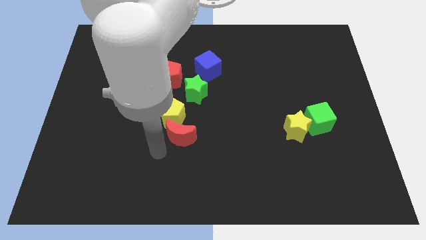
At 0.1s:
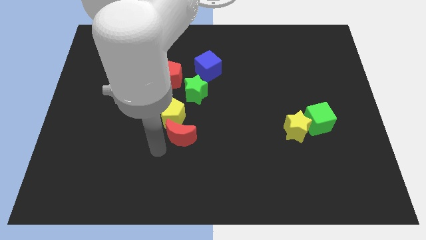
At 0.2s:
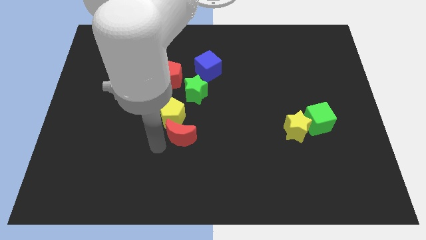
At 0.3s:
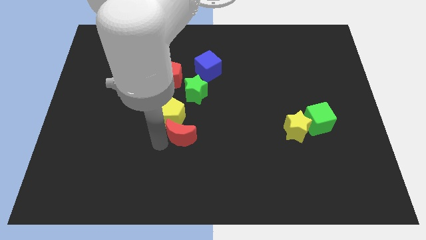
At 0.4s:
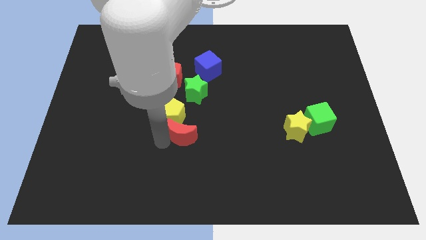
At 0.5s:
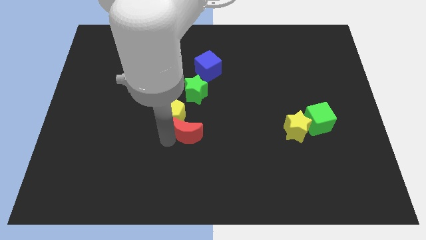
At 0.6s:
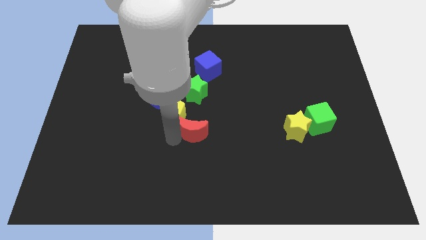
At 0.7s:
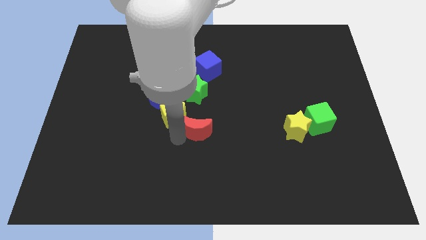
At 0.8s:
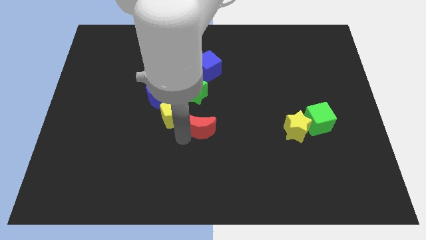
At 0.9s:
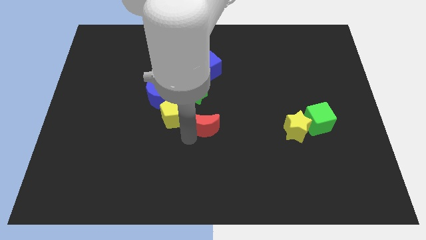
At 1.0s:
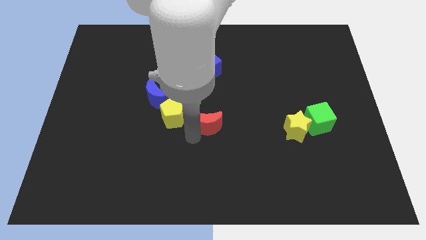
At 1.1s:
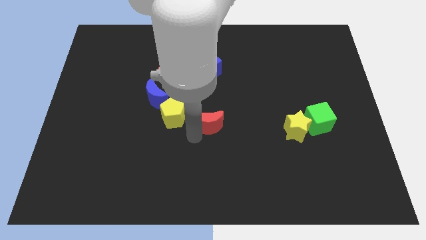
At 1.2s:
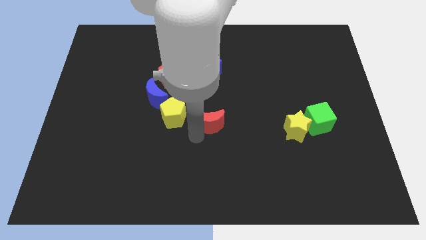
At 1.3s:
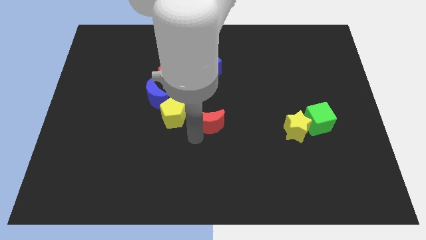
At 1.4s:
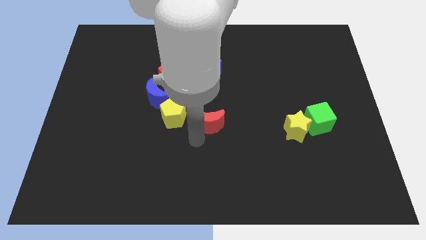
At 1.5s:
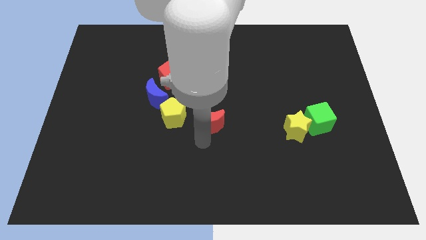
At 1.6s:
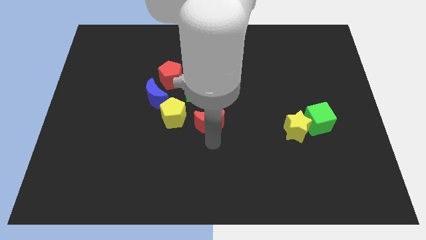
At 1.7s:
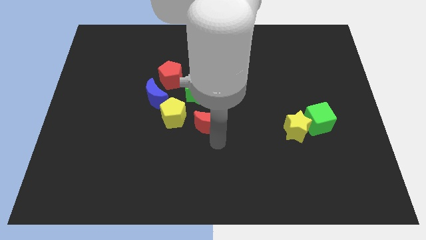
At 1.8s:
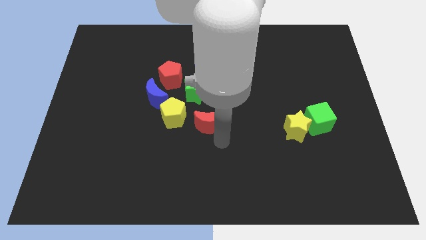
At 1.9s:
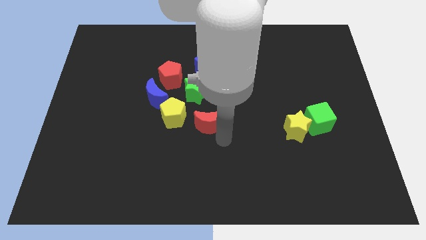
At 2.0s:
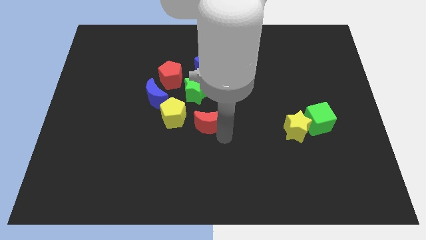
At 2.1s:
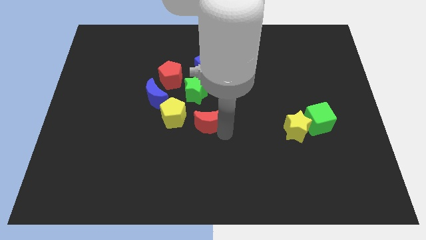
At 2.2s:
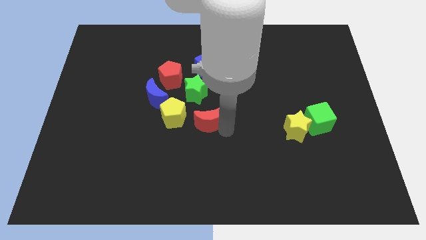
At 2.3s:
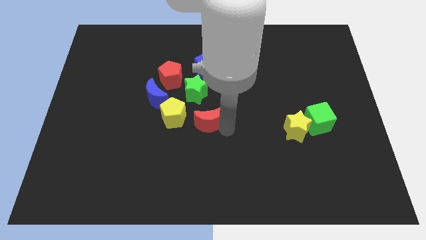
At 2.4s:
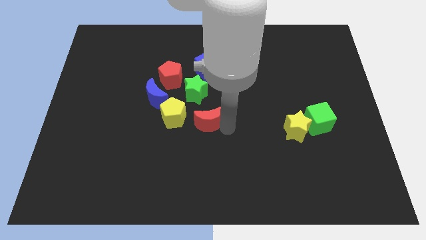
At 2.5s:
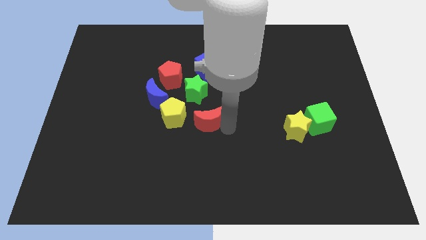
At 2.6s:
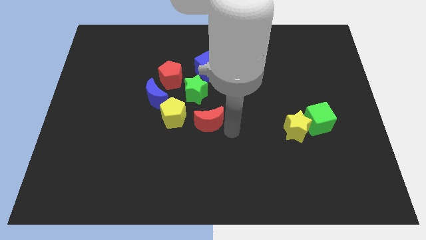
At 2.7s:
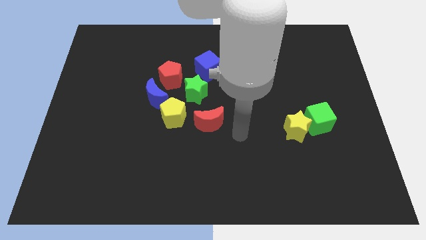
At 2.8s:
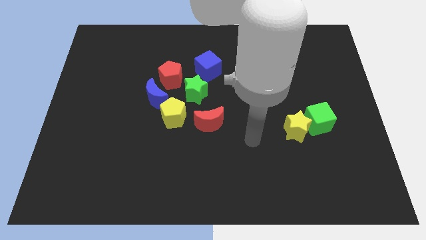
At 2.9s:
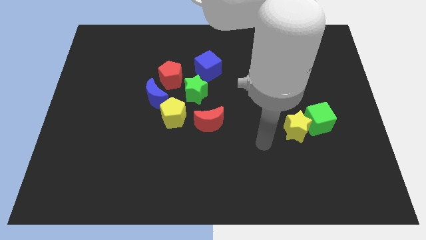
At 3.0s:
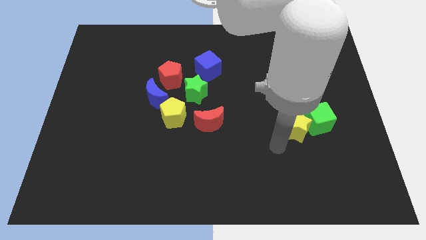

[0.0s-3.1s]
move the red moon horizontally at the right side of the yellow pentagon

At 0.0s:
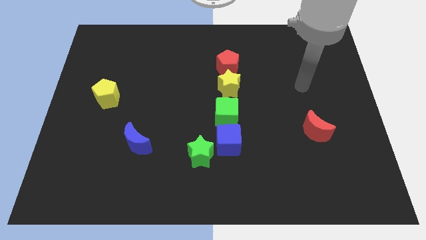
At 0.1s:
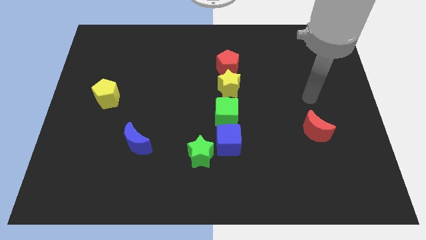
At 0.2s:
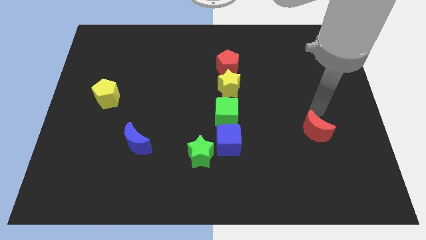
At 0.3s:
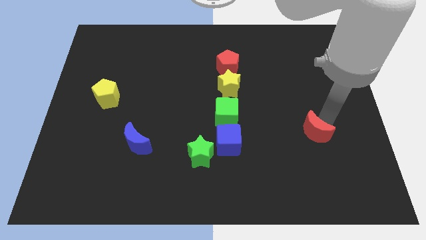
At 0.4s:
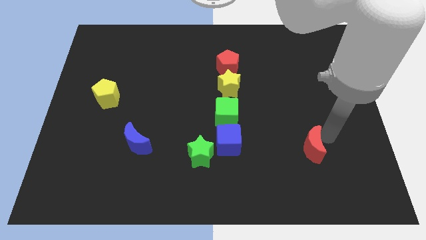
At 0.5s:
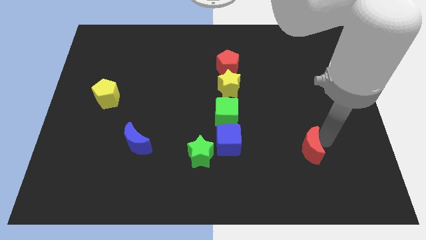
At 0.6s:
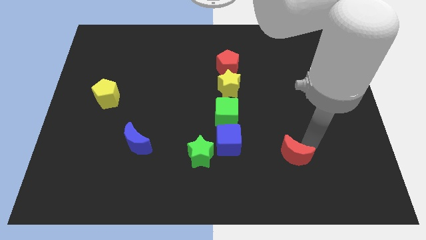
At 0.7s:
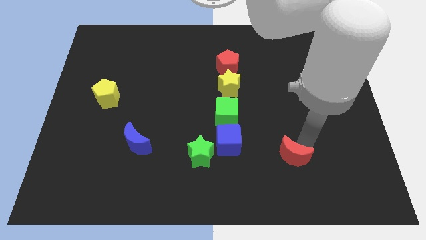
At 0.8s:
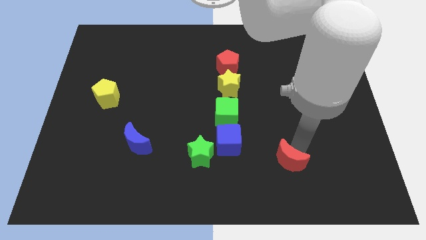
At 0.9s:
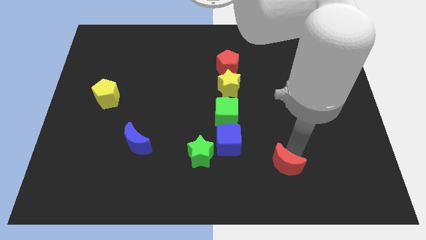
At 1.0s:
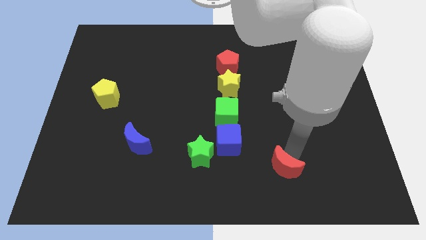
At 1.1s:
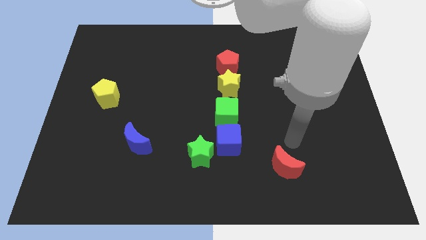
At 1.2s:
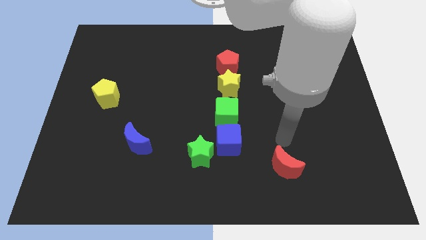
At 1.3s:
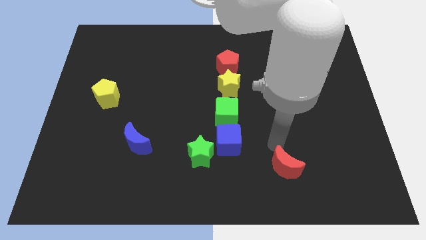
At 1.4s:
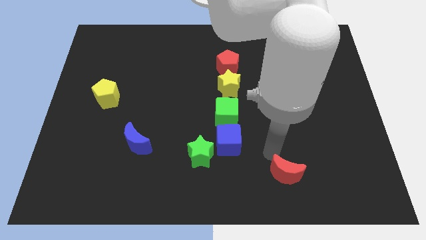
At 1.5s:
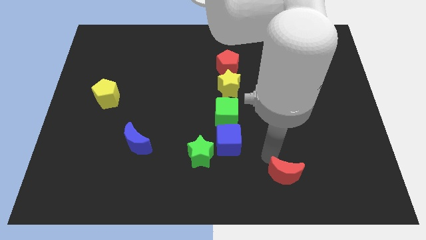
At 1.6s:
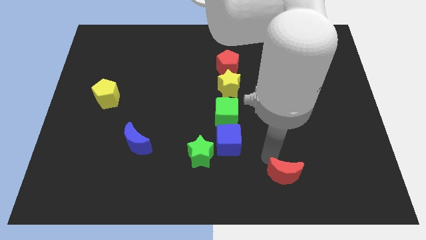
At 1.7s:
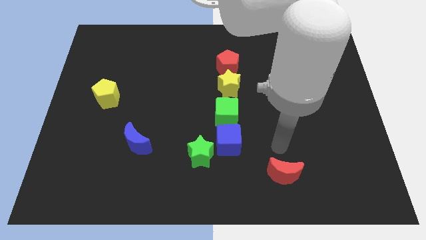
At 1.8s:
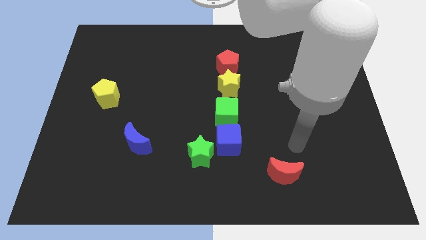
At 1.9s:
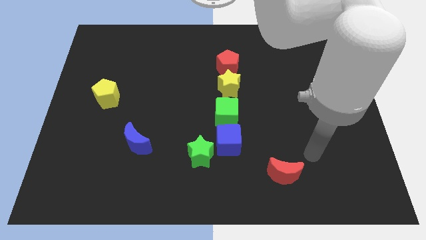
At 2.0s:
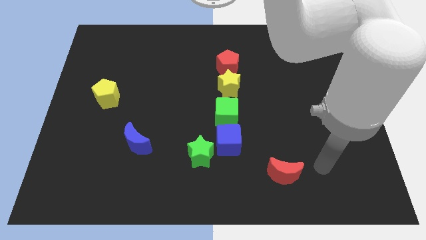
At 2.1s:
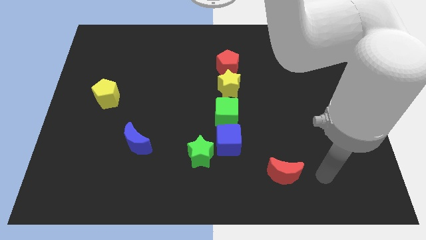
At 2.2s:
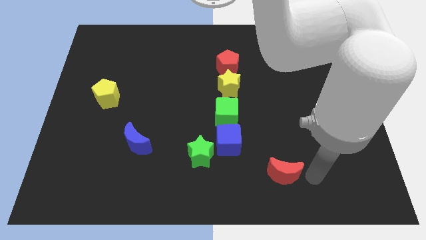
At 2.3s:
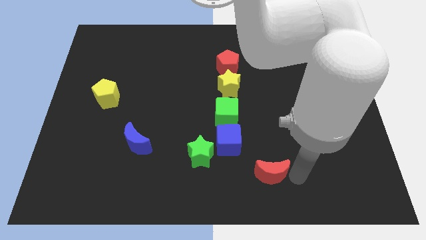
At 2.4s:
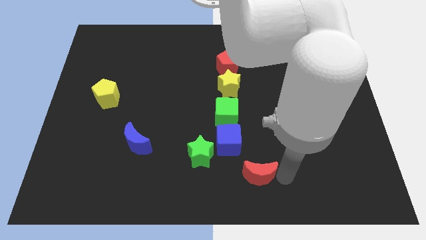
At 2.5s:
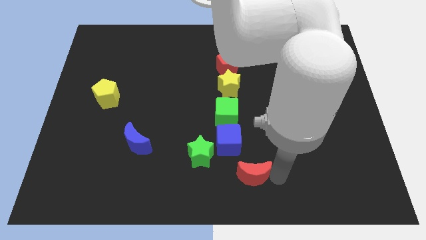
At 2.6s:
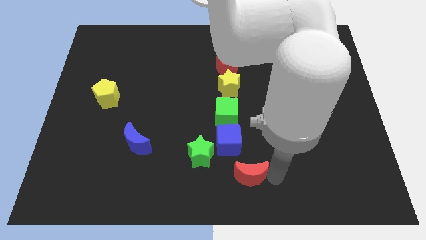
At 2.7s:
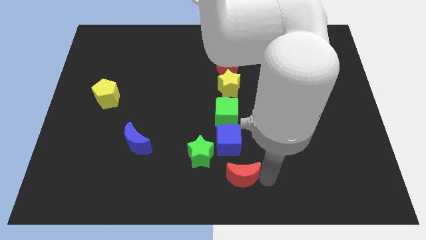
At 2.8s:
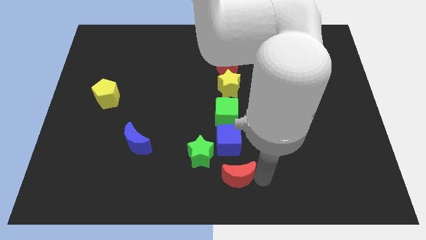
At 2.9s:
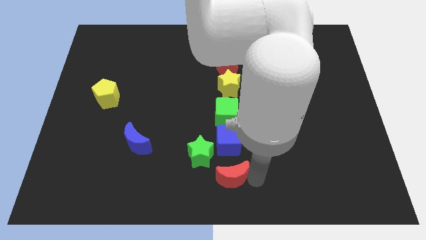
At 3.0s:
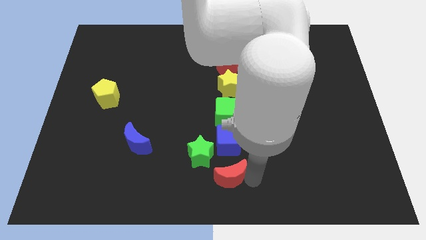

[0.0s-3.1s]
place red crescent below blue cube

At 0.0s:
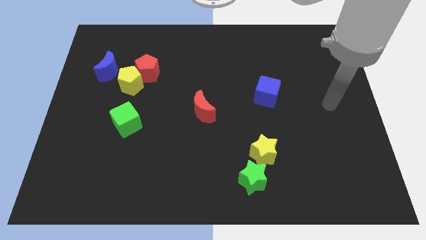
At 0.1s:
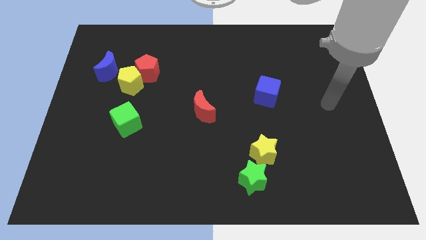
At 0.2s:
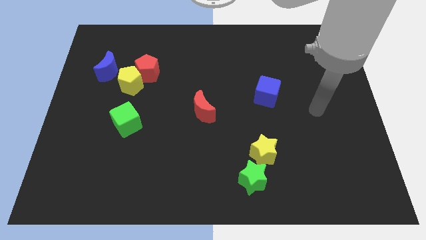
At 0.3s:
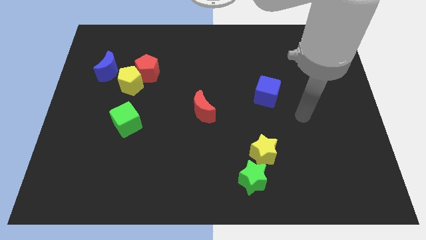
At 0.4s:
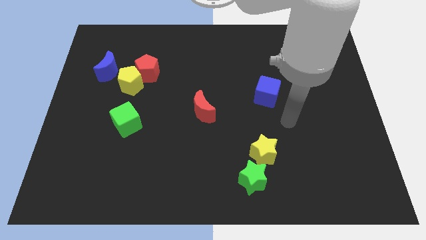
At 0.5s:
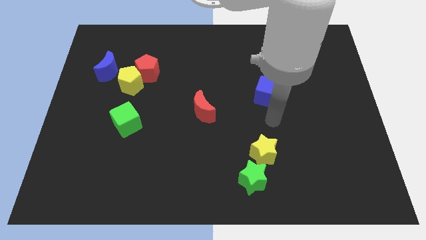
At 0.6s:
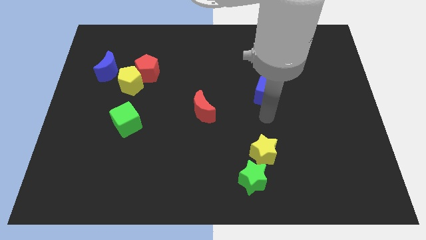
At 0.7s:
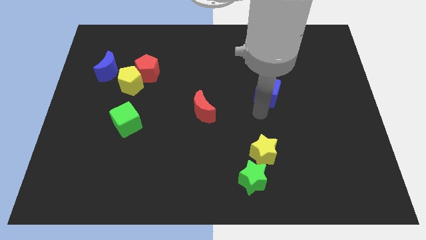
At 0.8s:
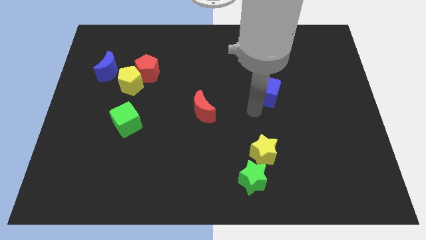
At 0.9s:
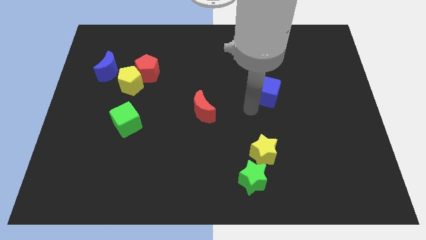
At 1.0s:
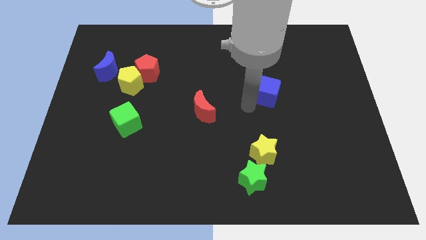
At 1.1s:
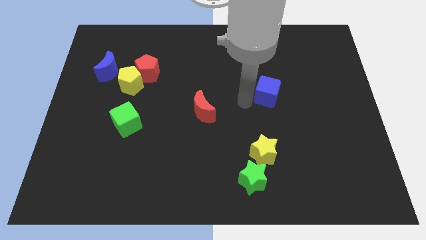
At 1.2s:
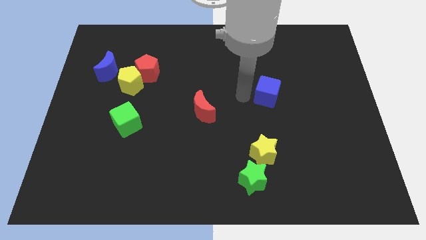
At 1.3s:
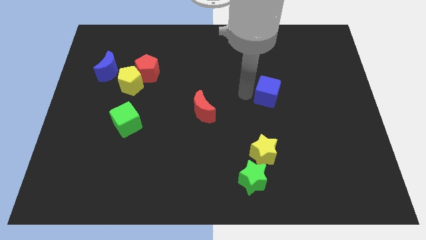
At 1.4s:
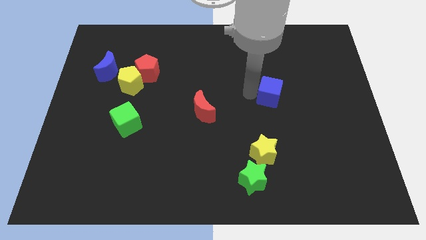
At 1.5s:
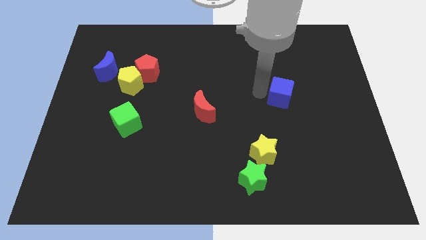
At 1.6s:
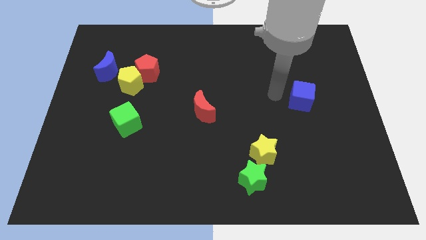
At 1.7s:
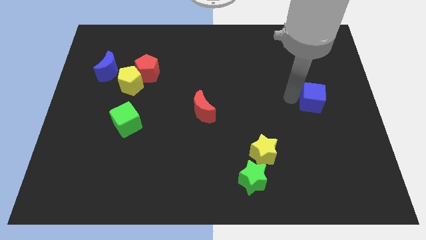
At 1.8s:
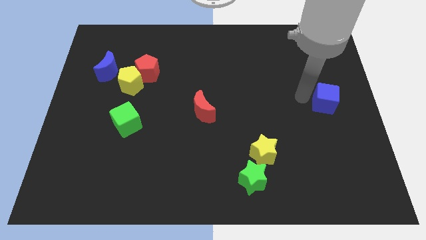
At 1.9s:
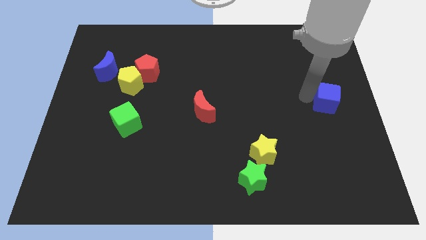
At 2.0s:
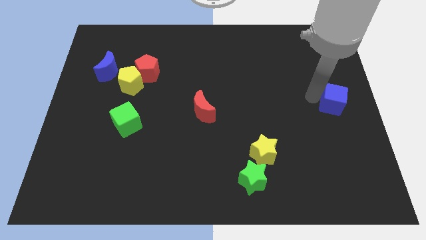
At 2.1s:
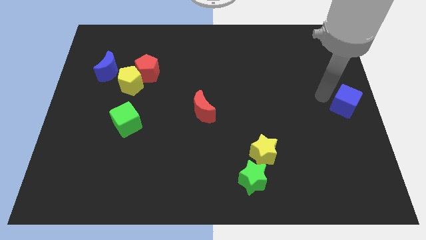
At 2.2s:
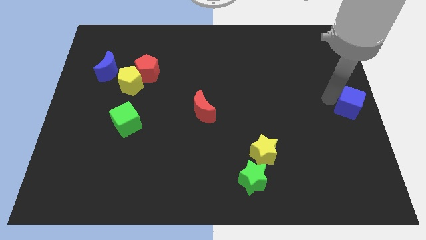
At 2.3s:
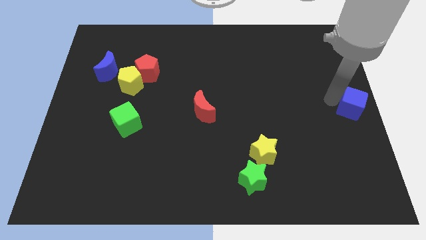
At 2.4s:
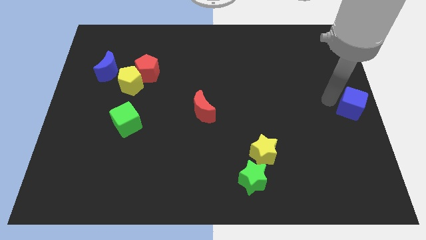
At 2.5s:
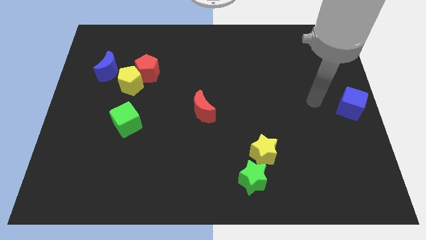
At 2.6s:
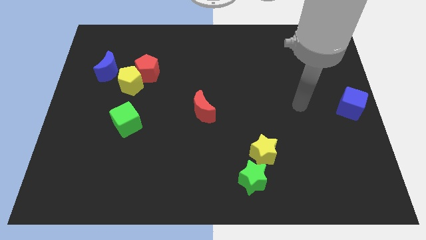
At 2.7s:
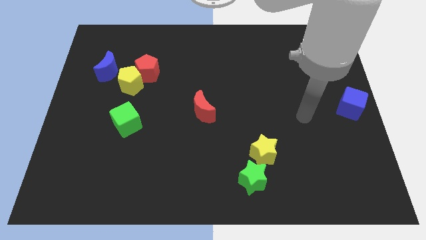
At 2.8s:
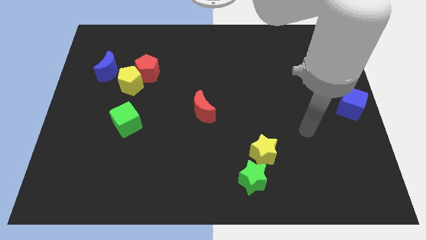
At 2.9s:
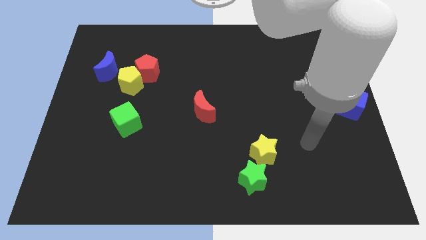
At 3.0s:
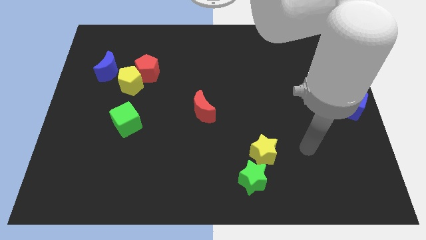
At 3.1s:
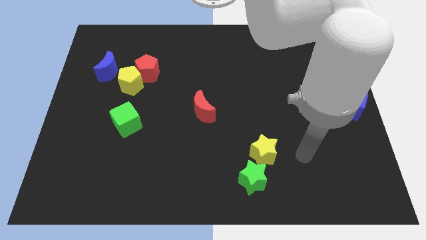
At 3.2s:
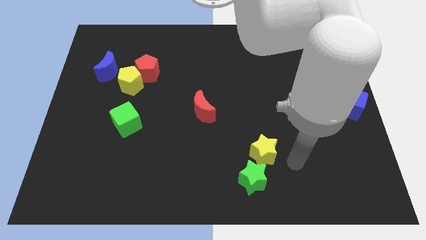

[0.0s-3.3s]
move blue cube towards middle left side of the board
